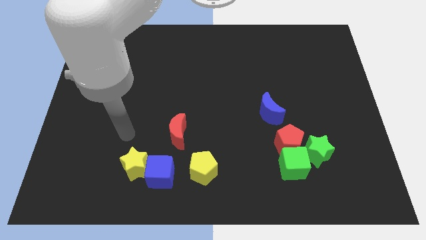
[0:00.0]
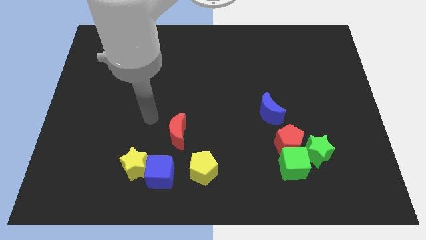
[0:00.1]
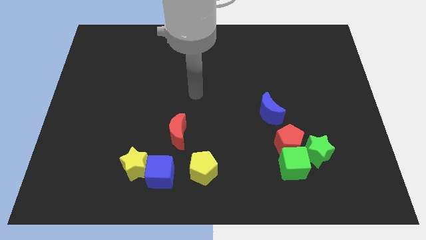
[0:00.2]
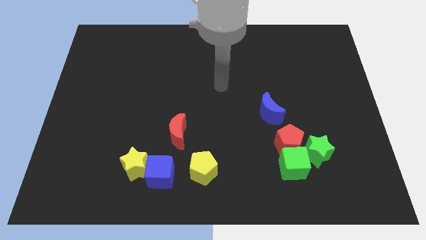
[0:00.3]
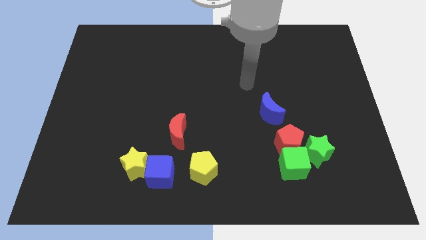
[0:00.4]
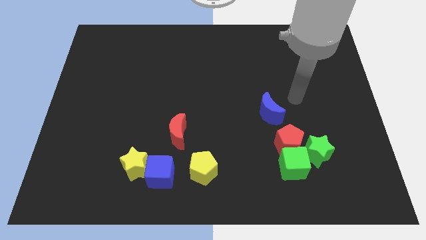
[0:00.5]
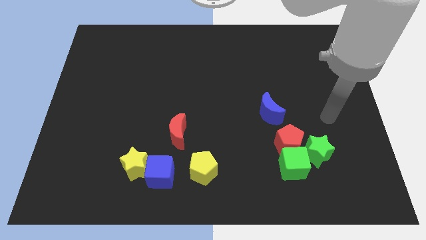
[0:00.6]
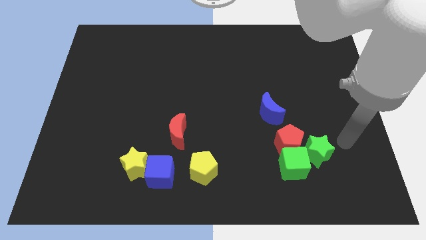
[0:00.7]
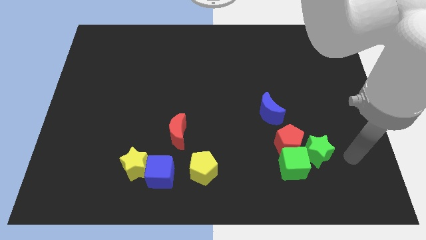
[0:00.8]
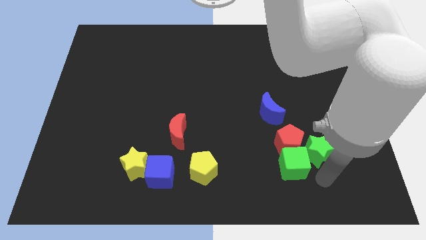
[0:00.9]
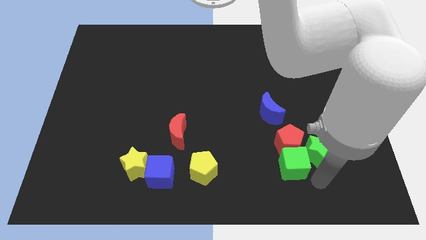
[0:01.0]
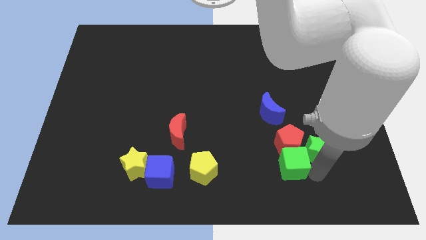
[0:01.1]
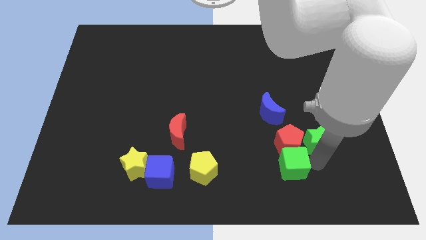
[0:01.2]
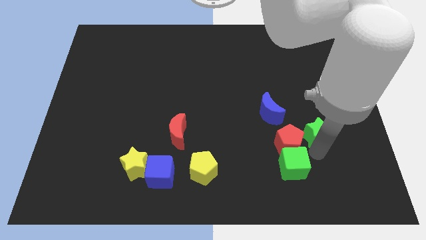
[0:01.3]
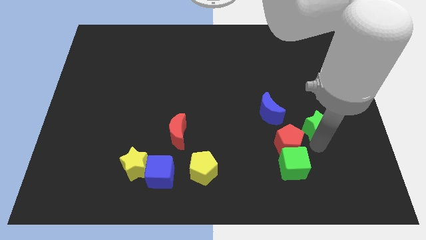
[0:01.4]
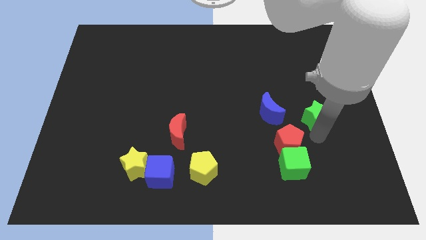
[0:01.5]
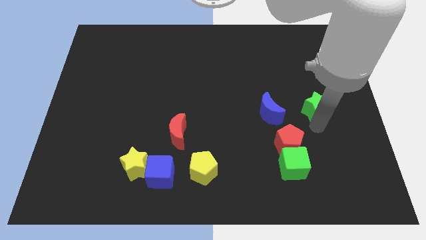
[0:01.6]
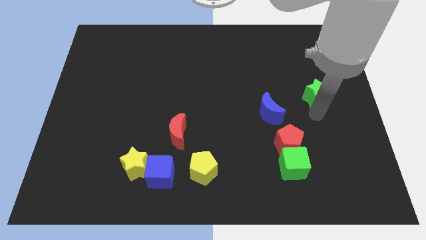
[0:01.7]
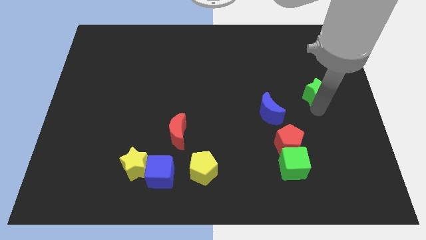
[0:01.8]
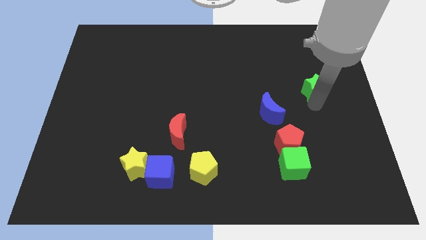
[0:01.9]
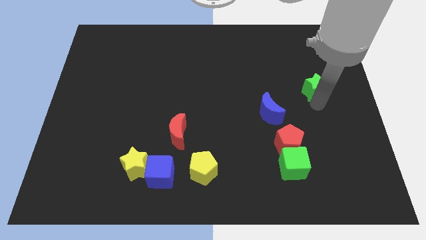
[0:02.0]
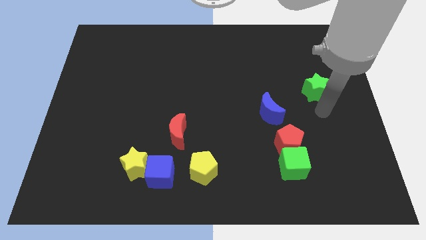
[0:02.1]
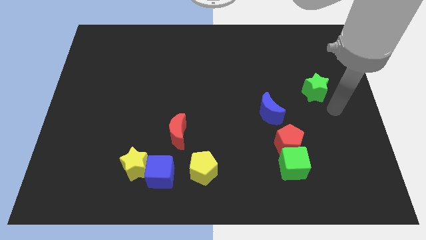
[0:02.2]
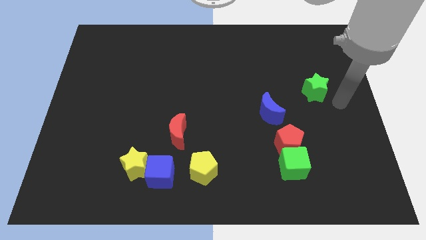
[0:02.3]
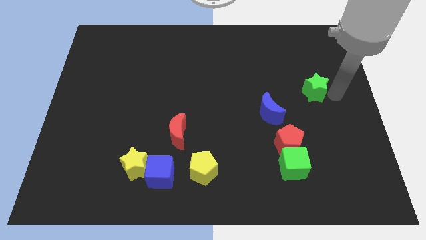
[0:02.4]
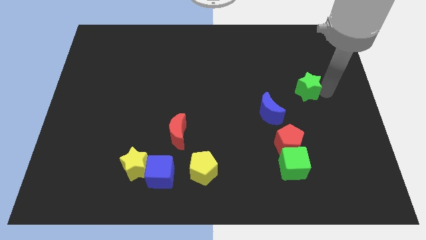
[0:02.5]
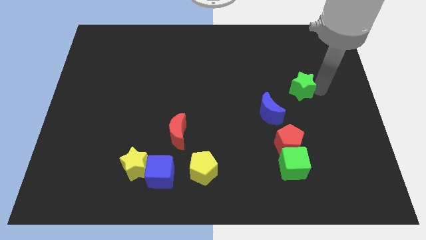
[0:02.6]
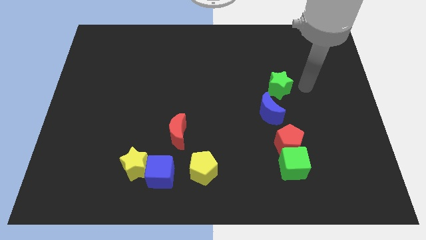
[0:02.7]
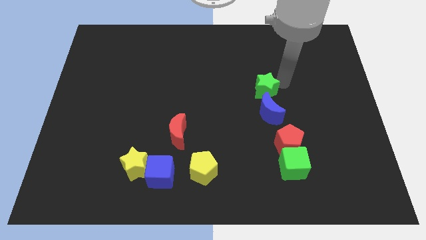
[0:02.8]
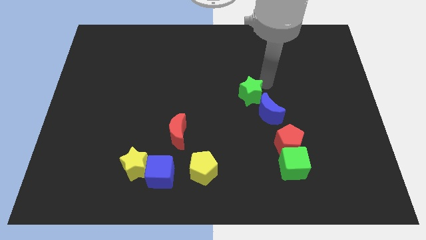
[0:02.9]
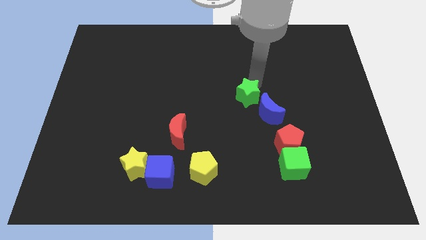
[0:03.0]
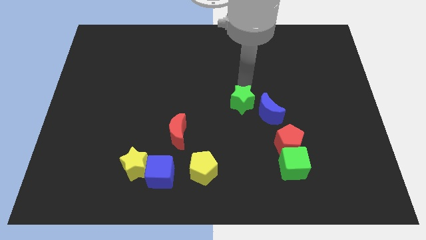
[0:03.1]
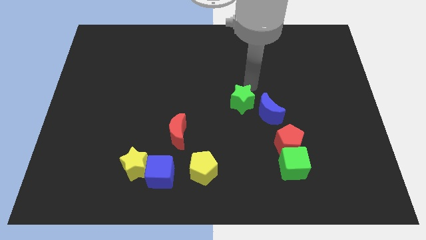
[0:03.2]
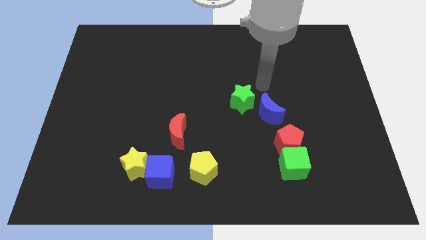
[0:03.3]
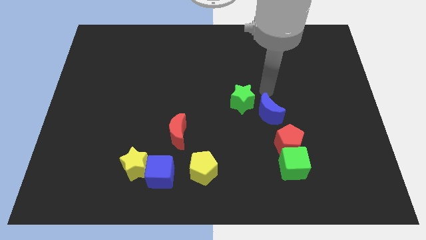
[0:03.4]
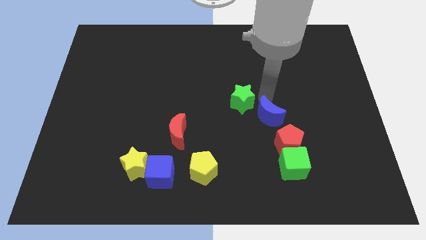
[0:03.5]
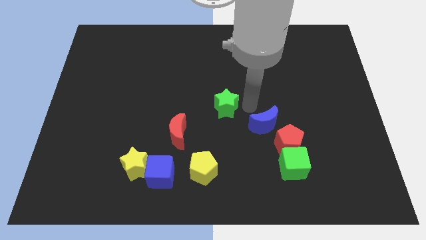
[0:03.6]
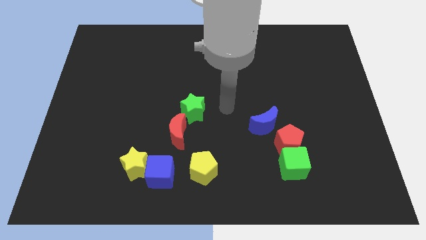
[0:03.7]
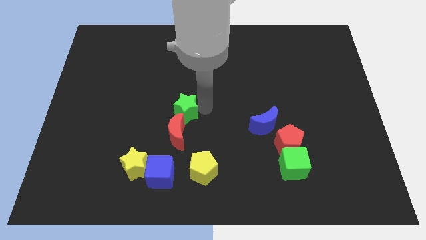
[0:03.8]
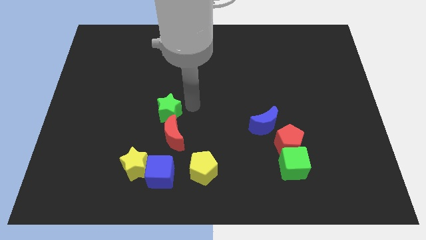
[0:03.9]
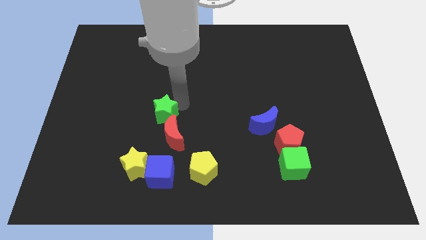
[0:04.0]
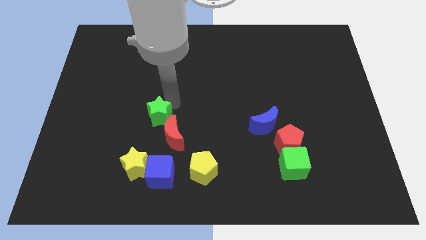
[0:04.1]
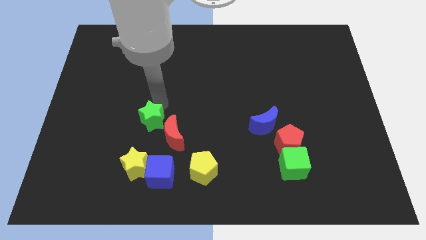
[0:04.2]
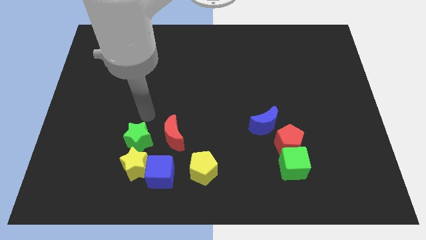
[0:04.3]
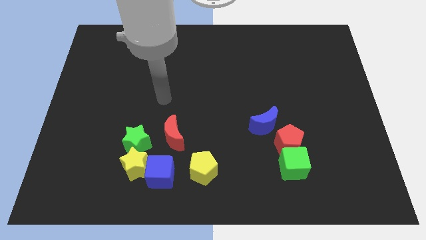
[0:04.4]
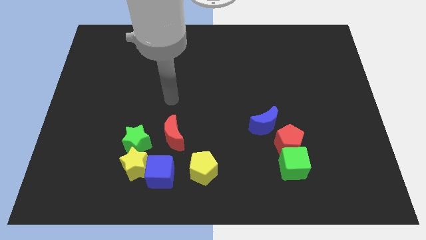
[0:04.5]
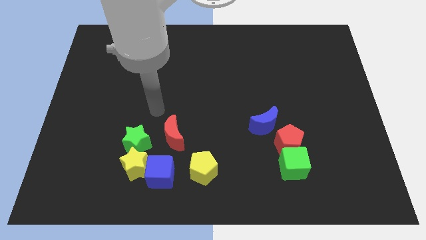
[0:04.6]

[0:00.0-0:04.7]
slide the green star next to the yellow star

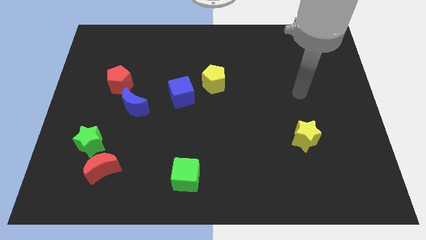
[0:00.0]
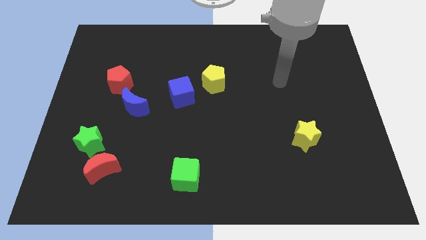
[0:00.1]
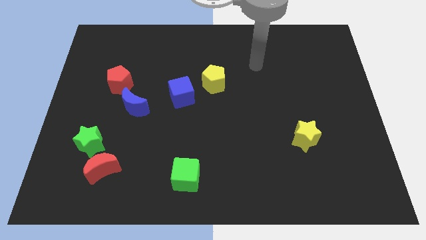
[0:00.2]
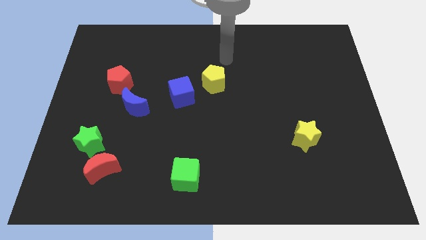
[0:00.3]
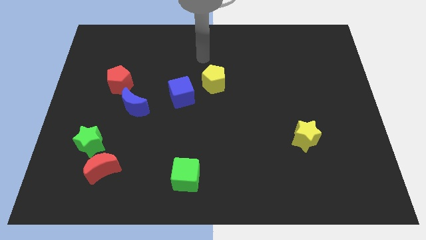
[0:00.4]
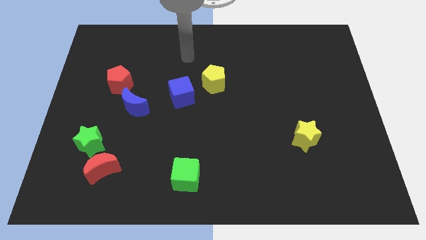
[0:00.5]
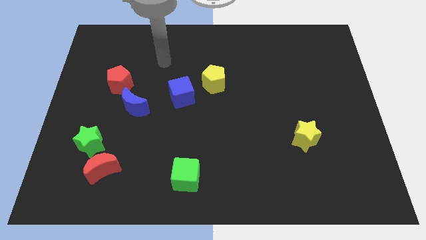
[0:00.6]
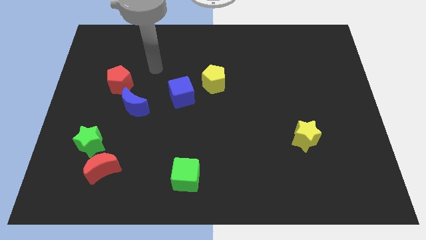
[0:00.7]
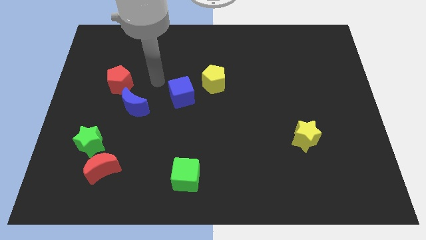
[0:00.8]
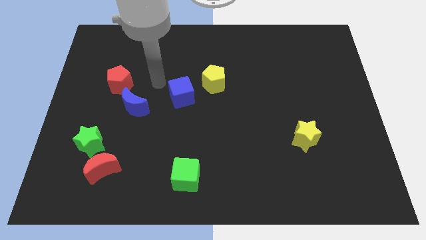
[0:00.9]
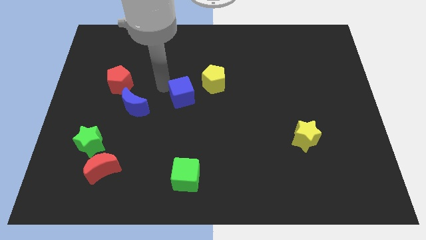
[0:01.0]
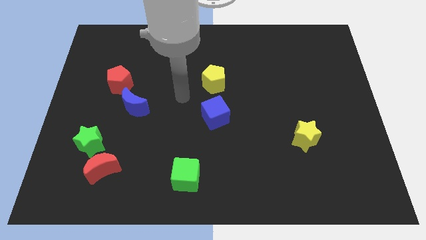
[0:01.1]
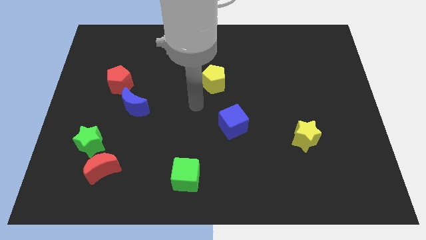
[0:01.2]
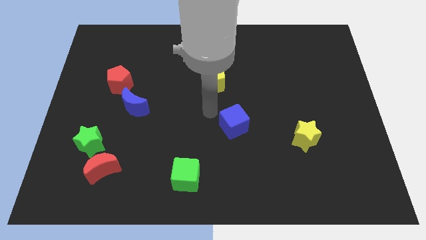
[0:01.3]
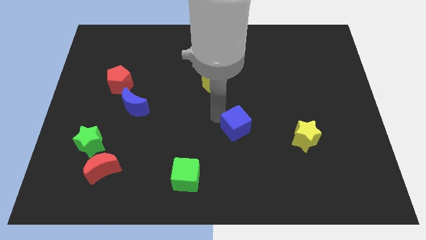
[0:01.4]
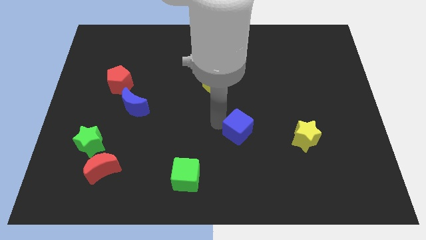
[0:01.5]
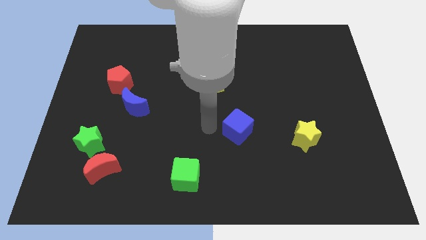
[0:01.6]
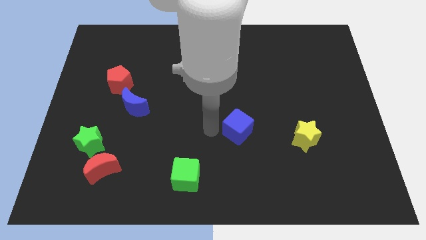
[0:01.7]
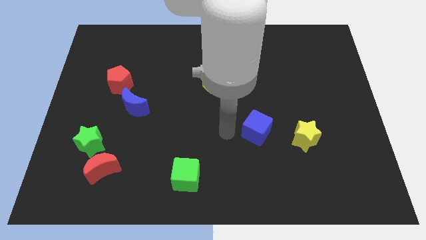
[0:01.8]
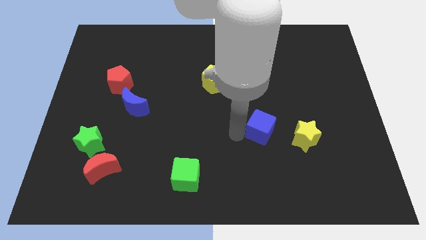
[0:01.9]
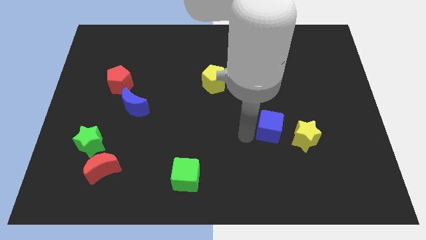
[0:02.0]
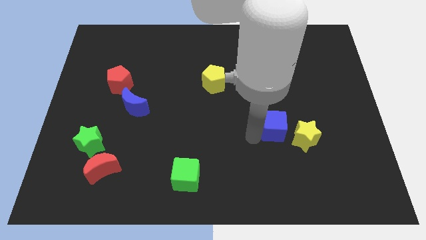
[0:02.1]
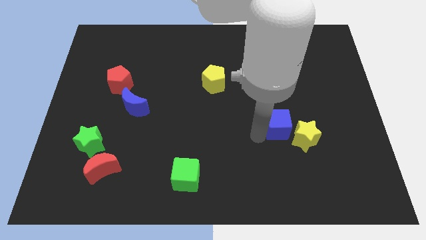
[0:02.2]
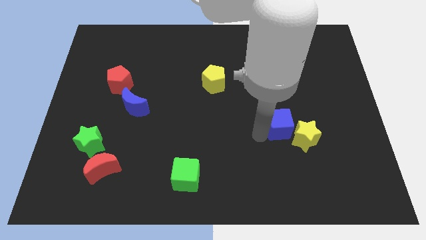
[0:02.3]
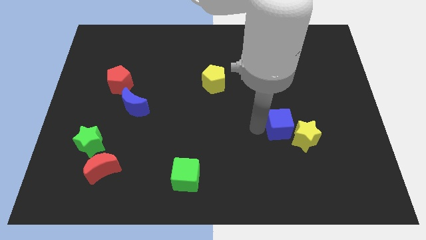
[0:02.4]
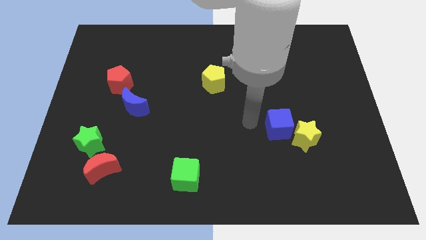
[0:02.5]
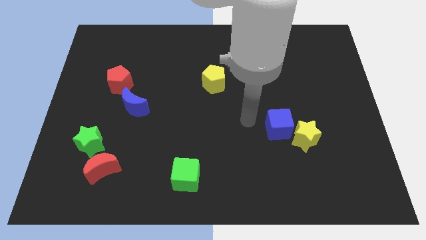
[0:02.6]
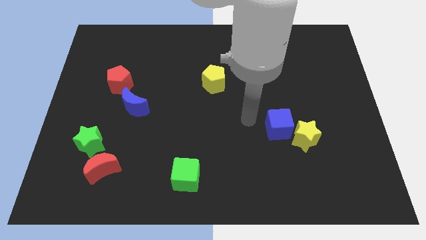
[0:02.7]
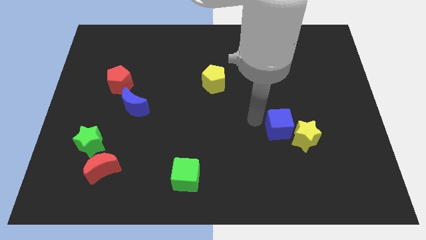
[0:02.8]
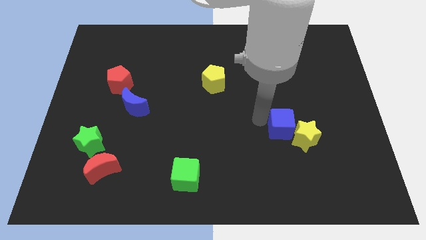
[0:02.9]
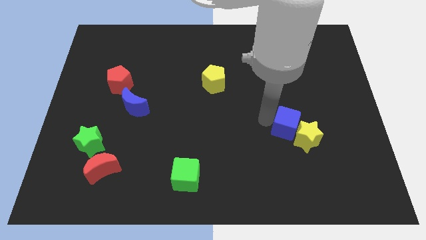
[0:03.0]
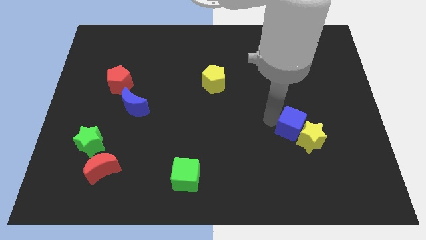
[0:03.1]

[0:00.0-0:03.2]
put the blue cube next to the yellow star

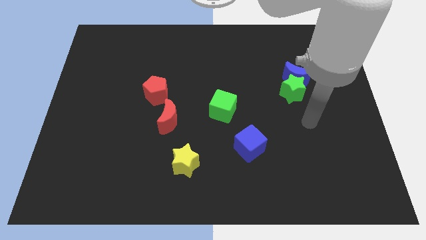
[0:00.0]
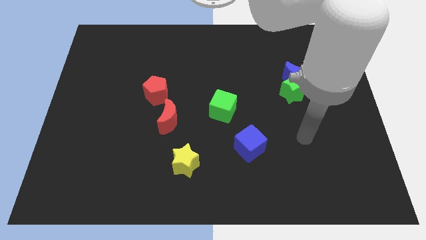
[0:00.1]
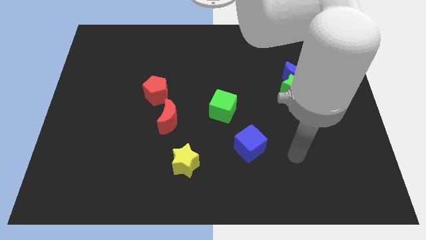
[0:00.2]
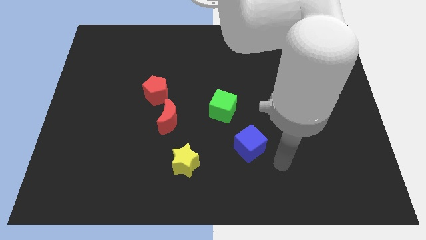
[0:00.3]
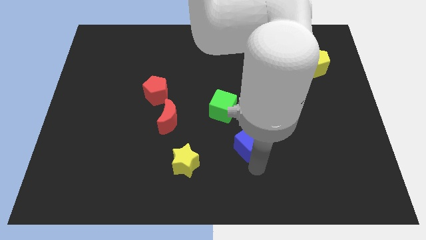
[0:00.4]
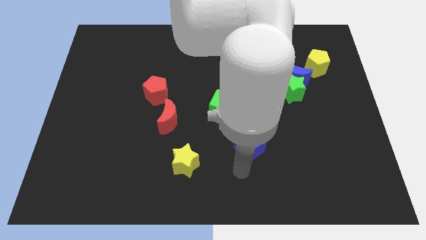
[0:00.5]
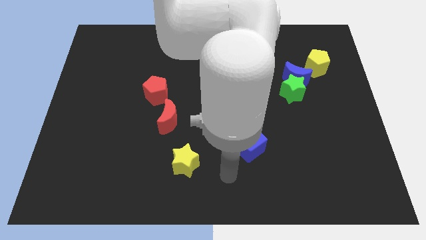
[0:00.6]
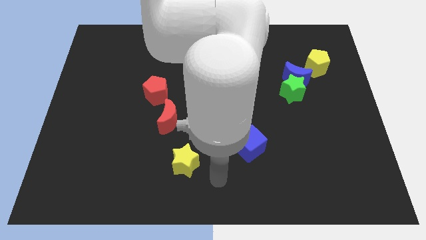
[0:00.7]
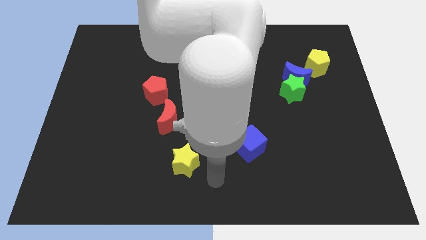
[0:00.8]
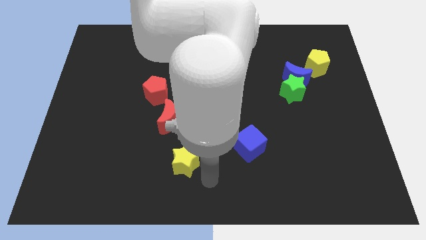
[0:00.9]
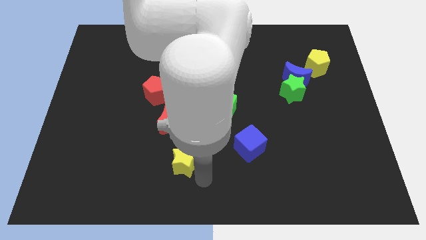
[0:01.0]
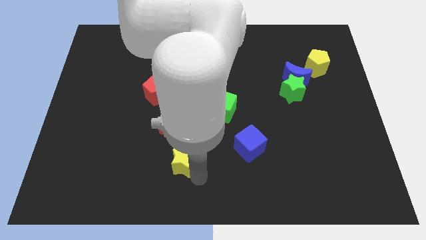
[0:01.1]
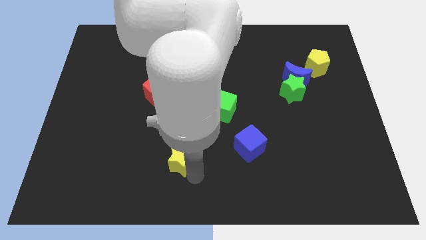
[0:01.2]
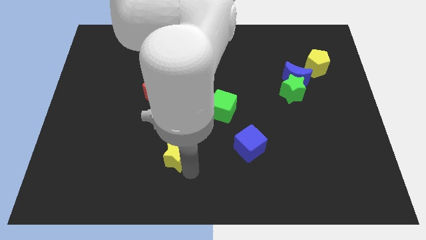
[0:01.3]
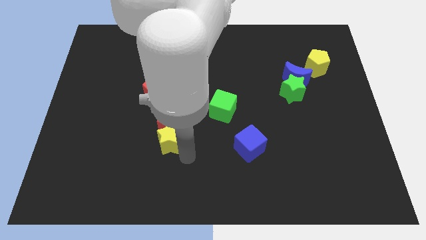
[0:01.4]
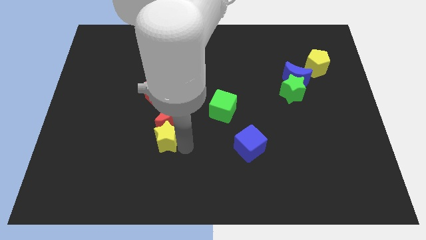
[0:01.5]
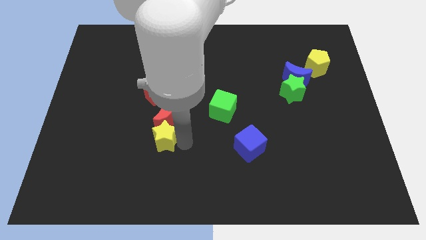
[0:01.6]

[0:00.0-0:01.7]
push the yellow star close to the red moon
